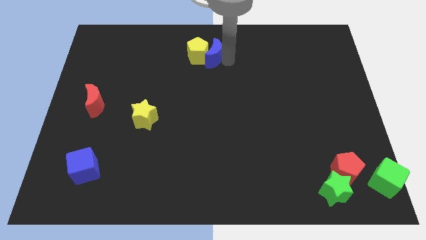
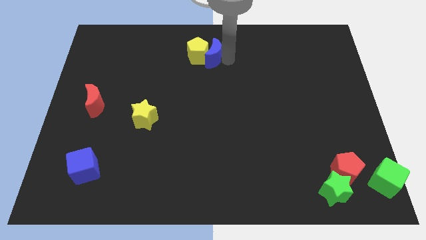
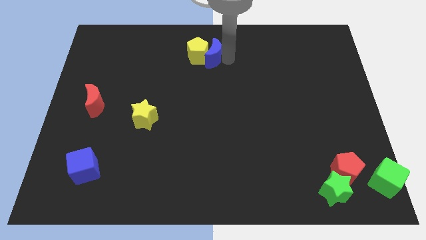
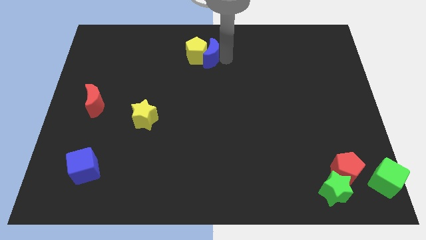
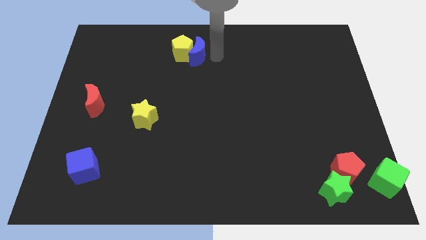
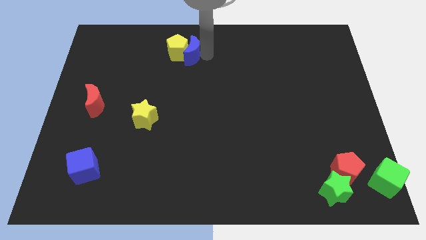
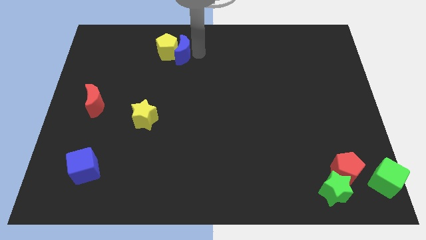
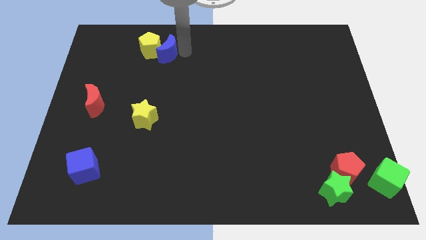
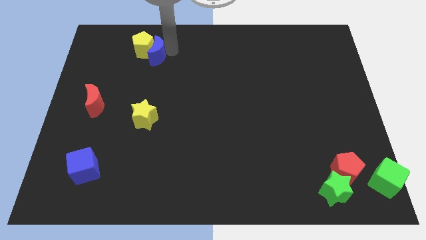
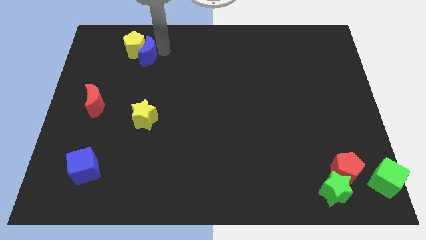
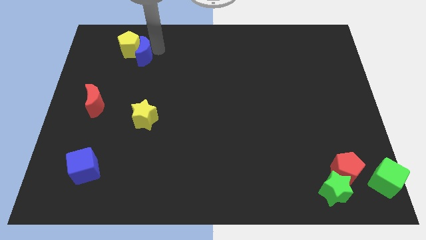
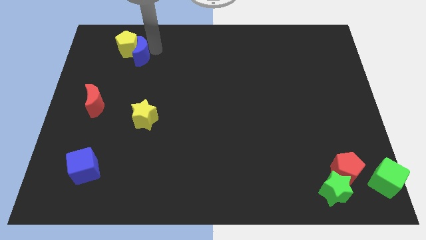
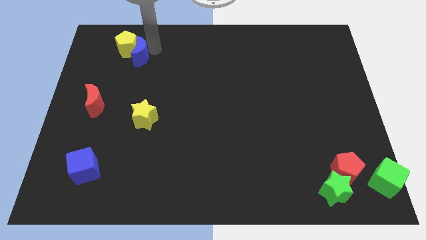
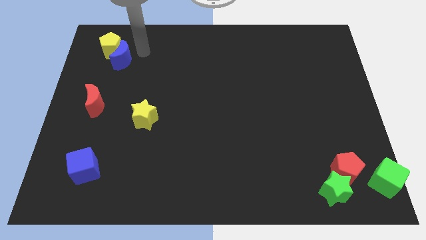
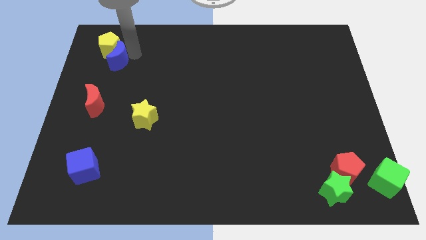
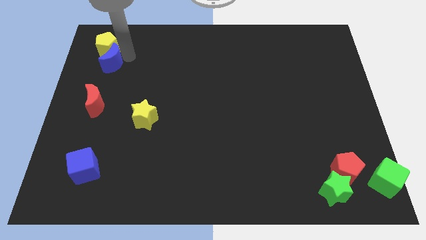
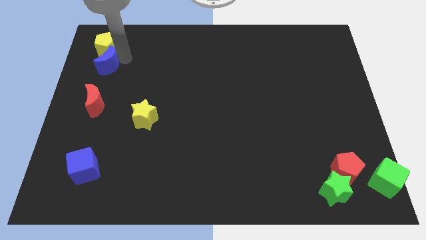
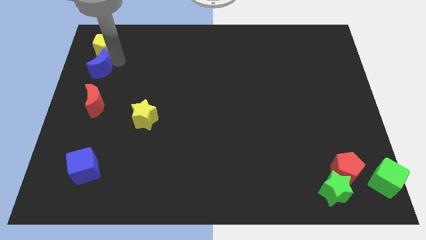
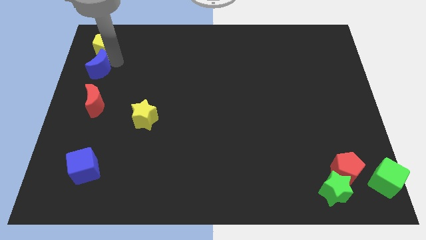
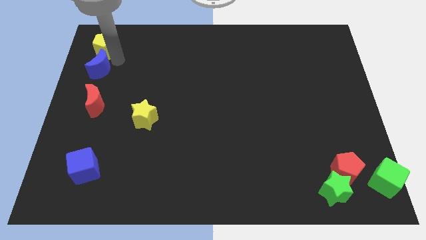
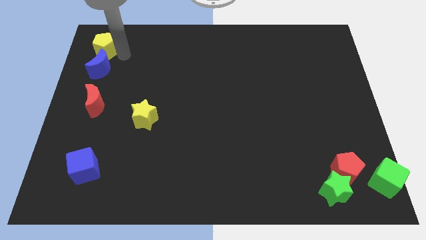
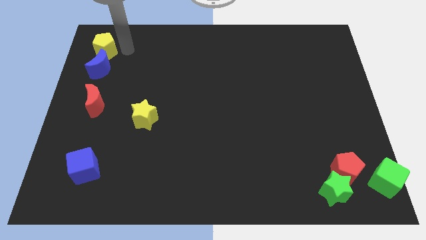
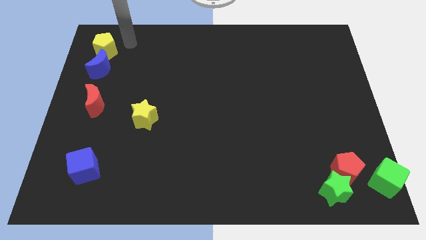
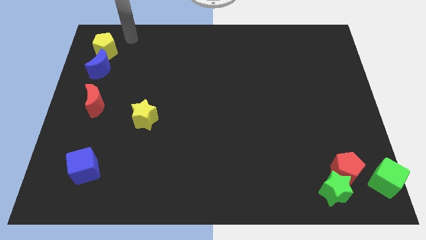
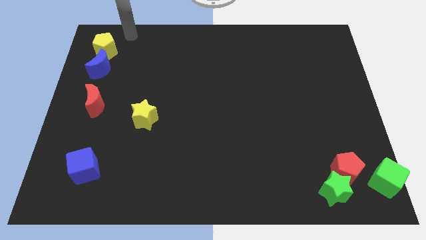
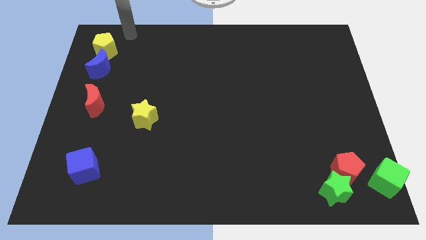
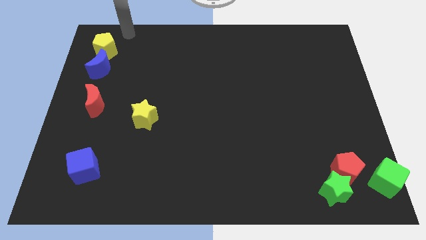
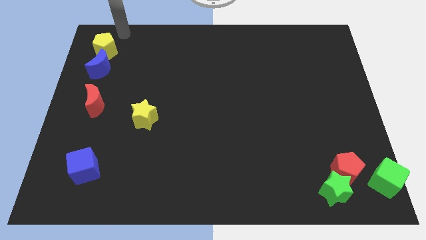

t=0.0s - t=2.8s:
place the blue moon in between the red moon and yellow pentagon

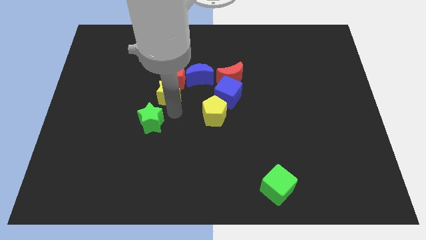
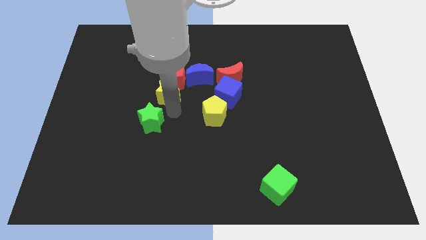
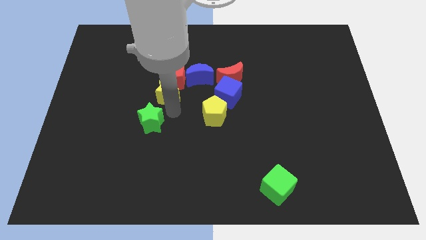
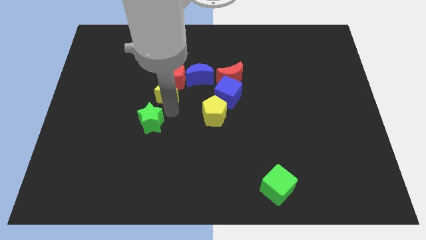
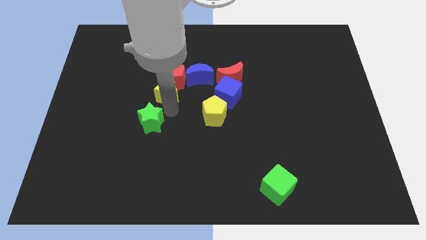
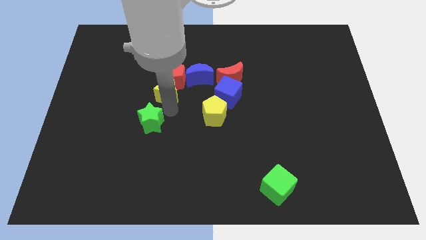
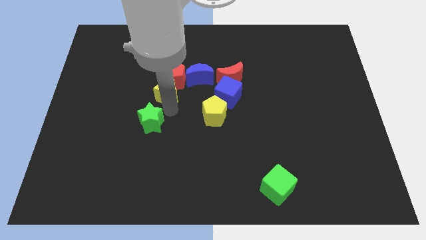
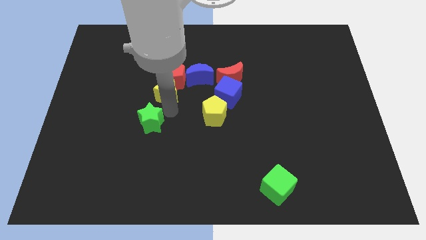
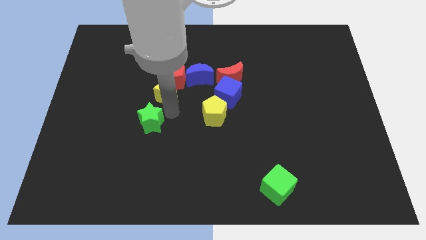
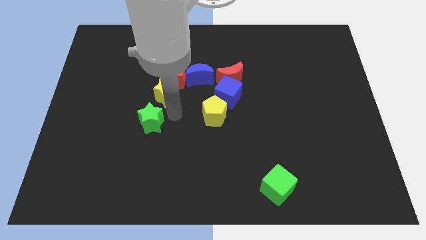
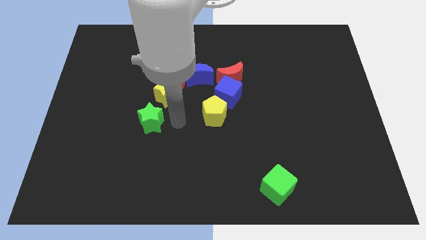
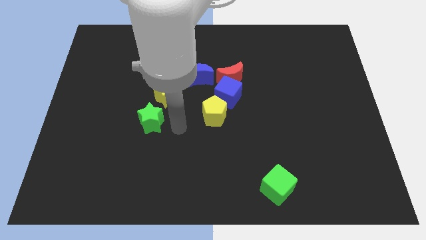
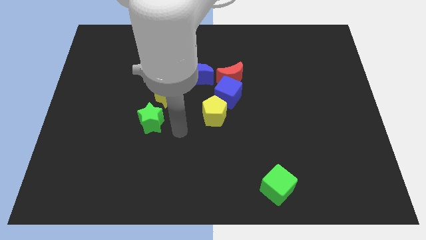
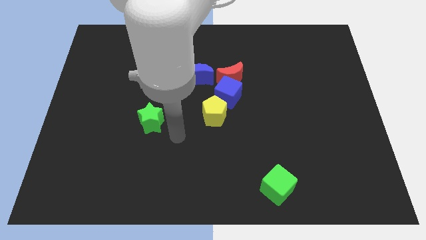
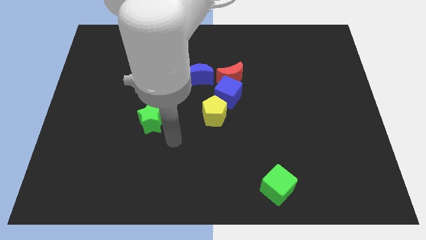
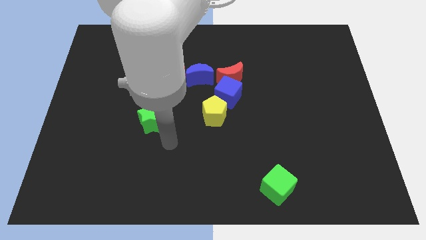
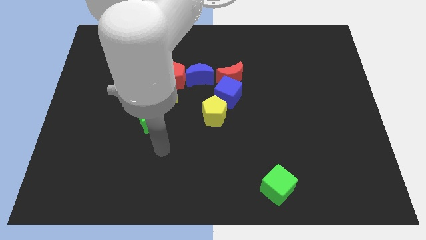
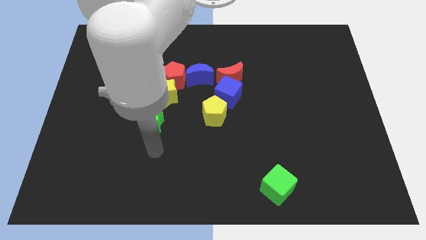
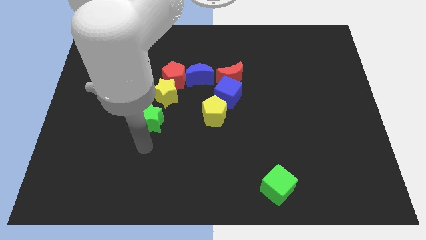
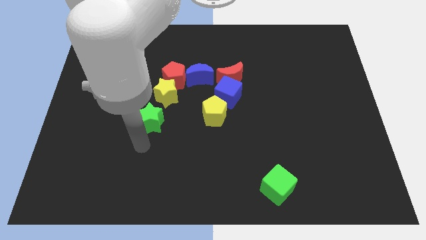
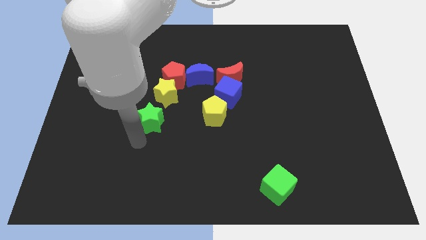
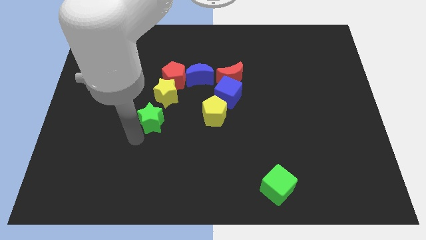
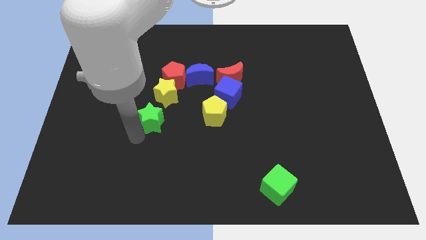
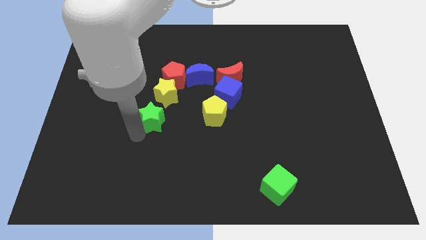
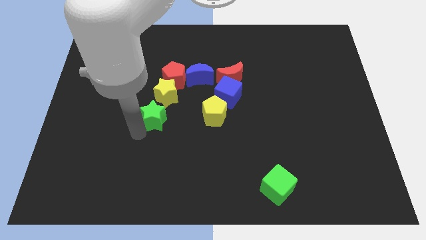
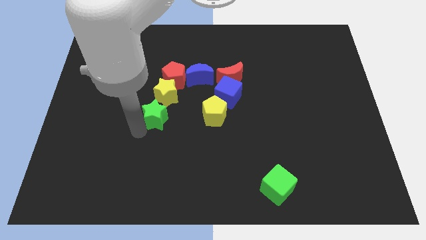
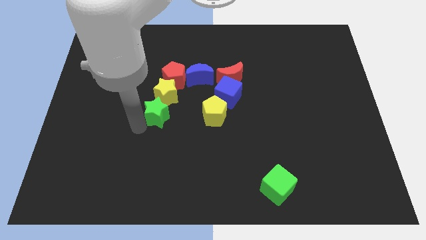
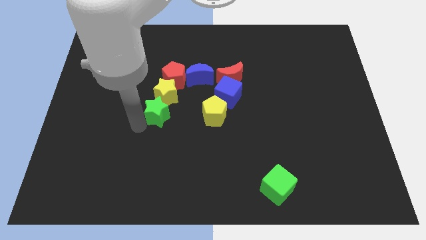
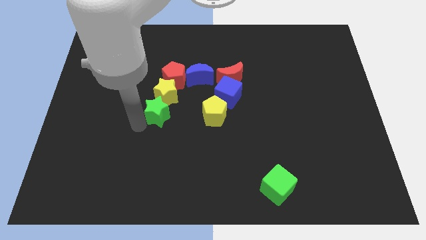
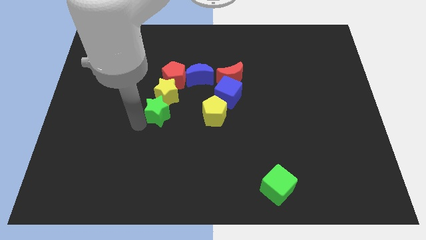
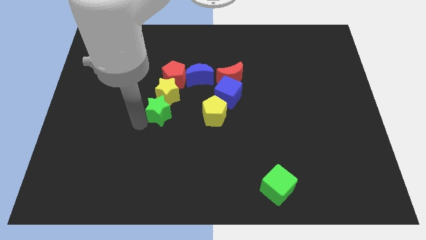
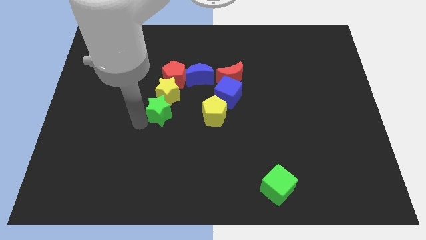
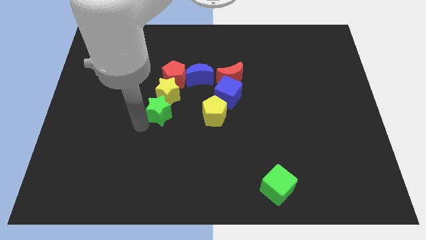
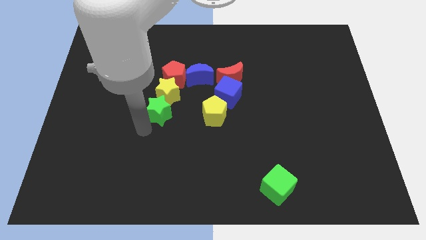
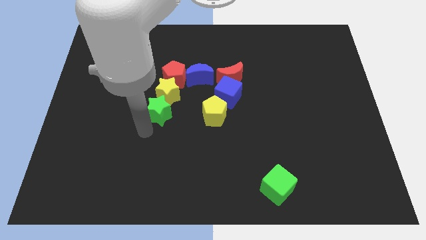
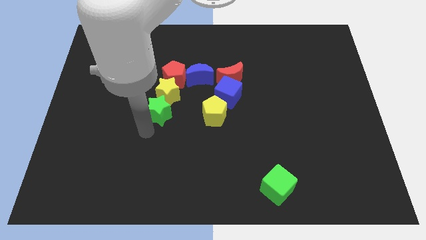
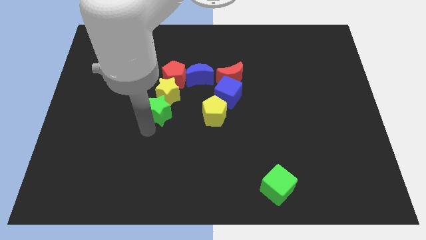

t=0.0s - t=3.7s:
push the green star into the yellow star

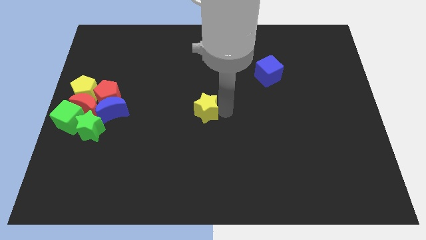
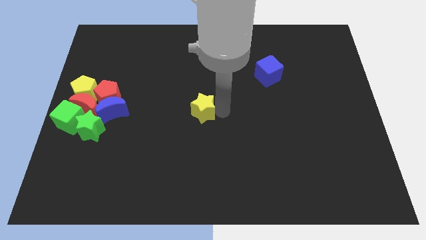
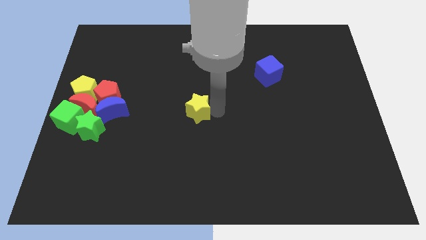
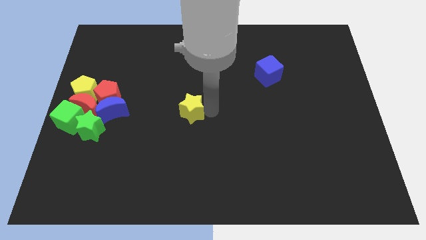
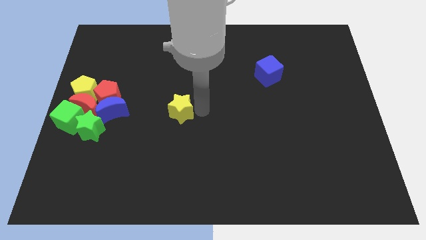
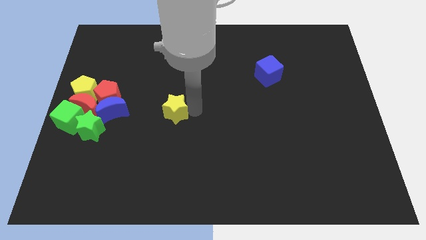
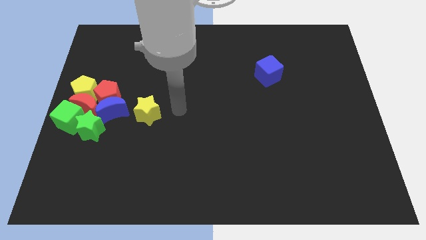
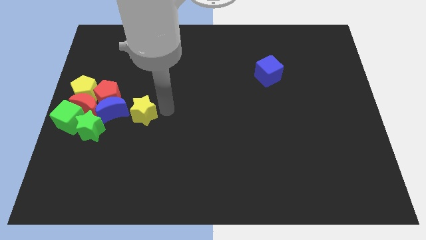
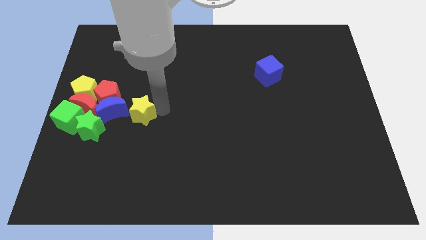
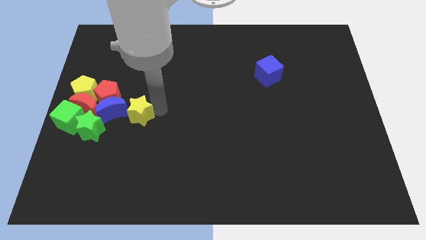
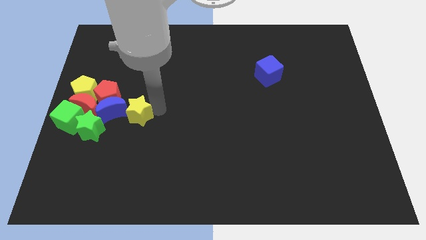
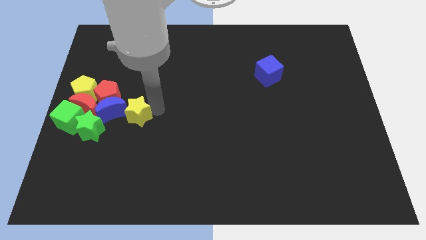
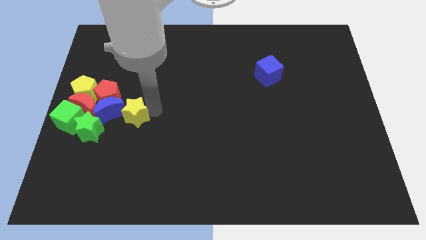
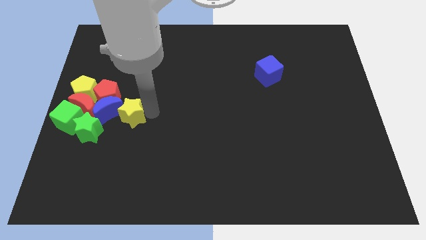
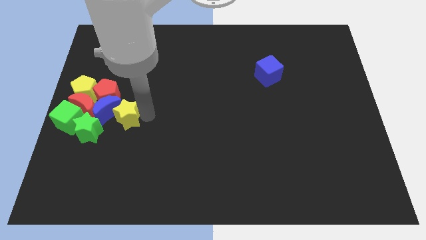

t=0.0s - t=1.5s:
slide the yellow star into the blue crescent

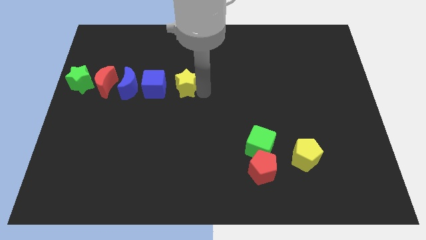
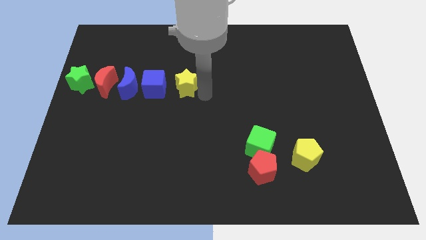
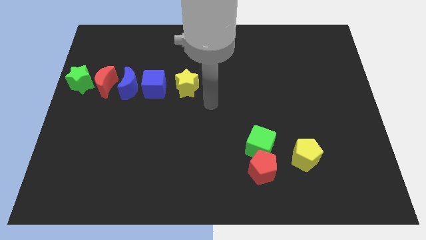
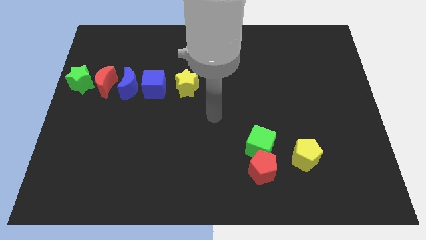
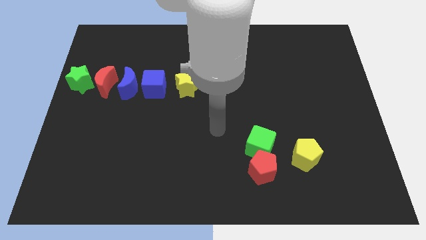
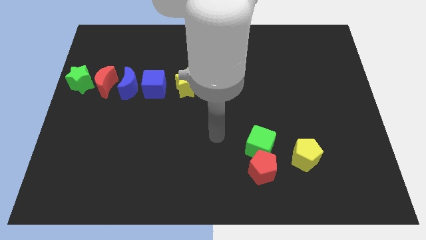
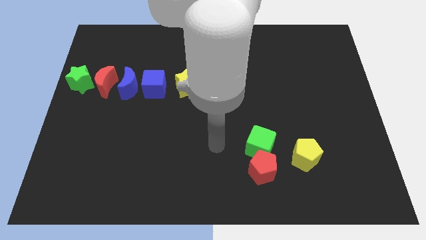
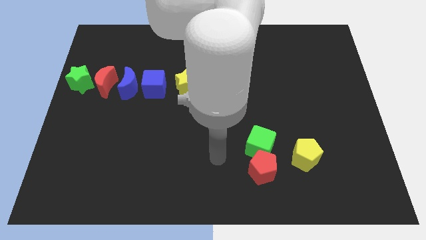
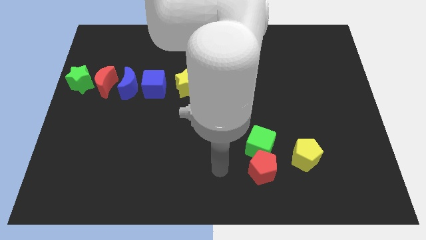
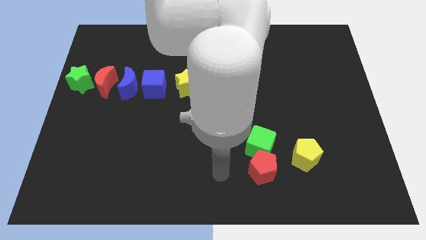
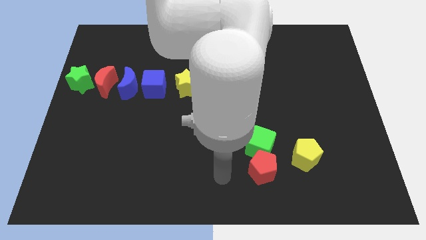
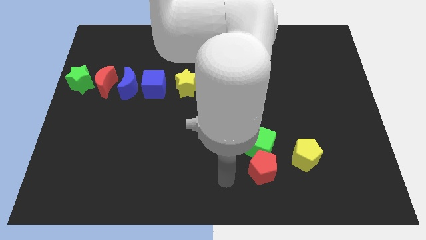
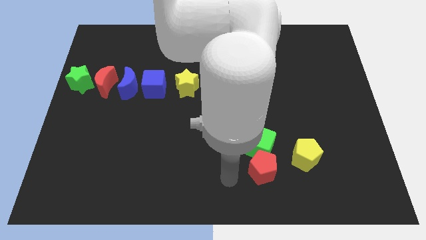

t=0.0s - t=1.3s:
move away from the yellow star
